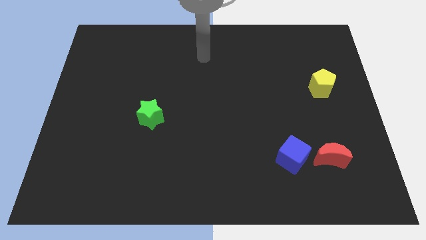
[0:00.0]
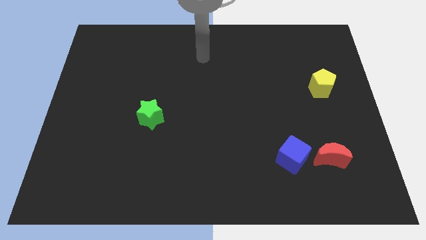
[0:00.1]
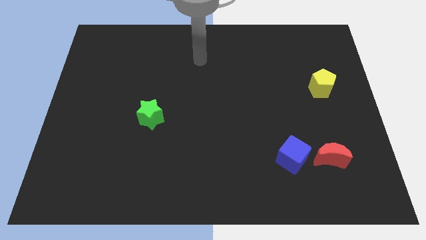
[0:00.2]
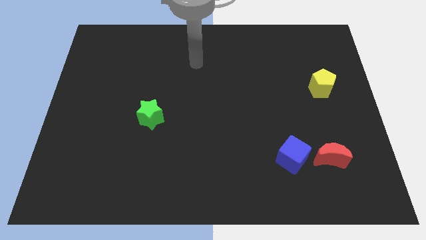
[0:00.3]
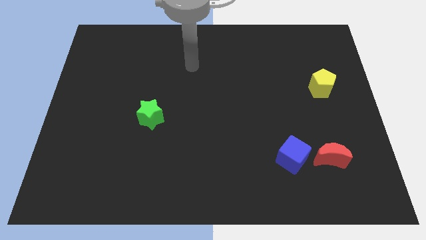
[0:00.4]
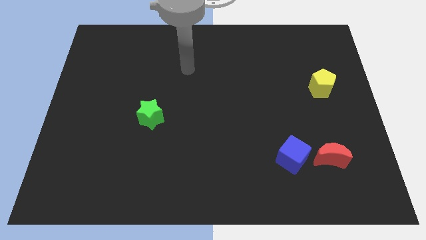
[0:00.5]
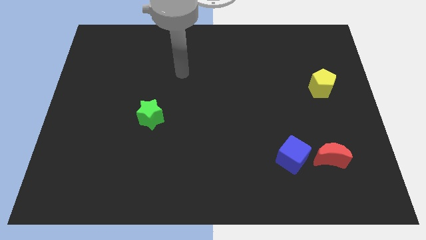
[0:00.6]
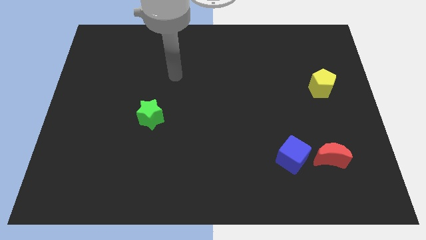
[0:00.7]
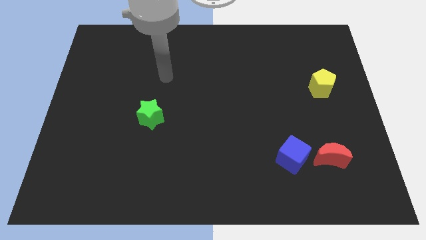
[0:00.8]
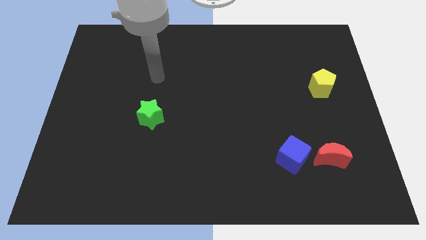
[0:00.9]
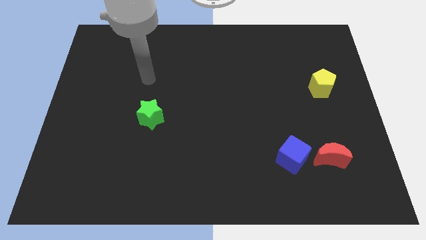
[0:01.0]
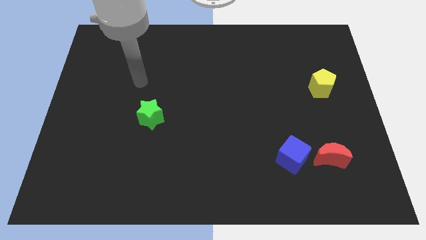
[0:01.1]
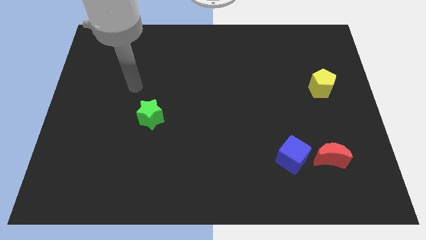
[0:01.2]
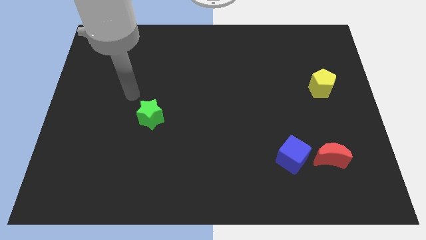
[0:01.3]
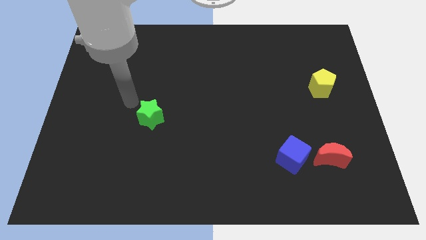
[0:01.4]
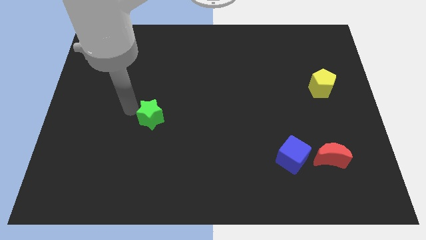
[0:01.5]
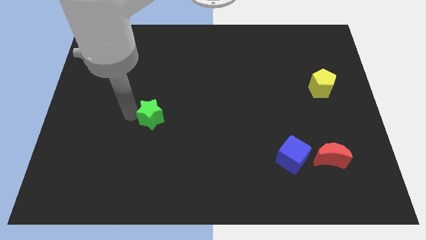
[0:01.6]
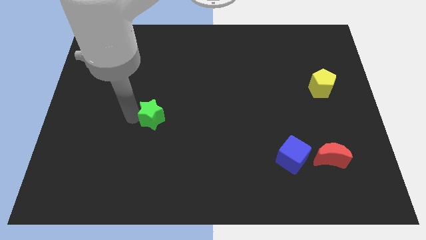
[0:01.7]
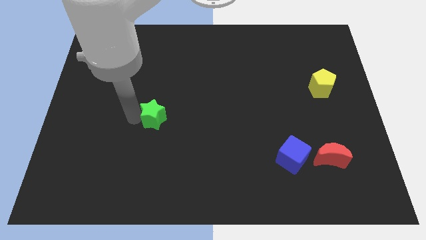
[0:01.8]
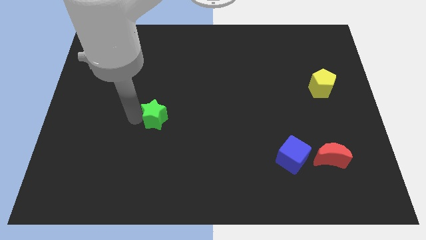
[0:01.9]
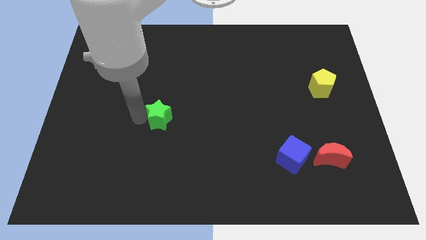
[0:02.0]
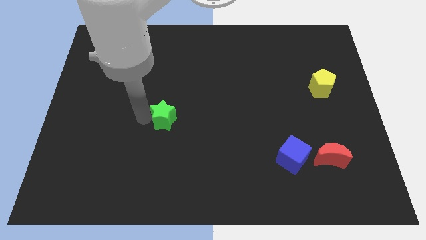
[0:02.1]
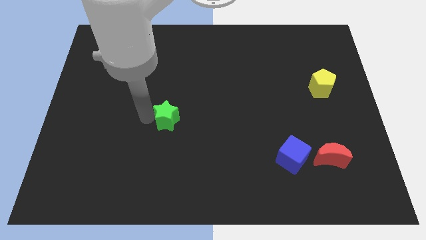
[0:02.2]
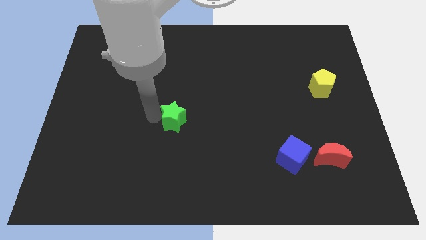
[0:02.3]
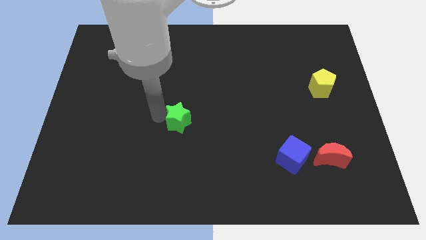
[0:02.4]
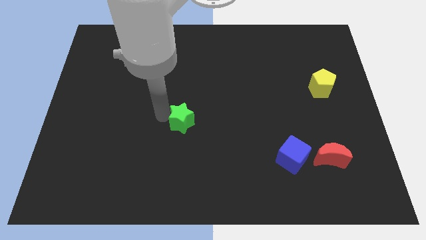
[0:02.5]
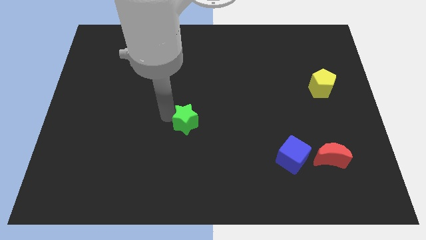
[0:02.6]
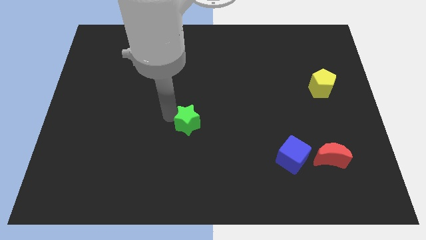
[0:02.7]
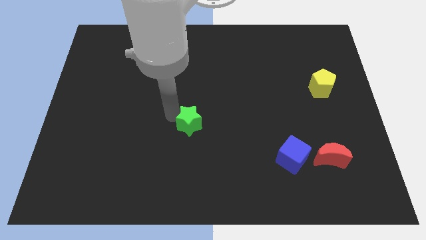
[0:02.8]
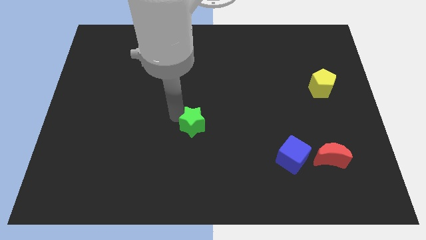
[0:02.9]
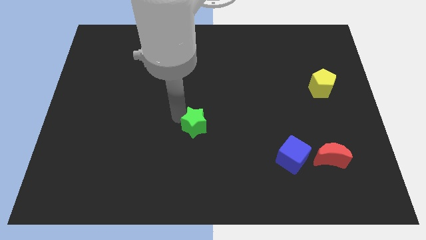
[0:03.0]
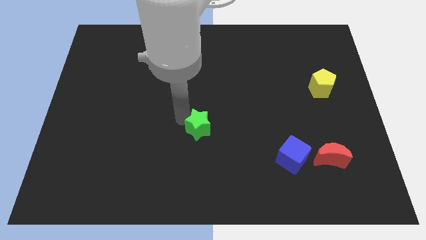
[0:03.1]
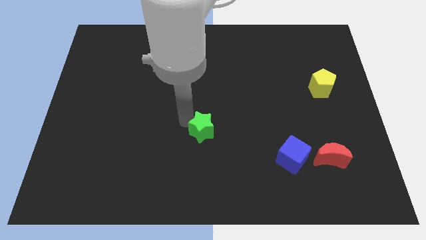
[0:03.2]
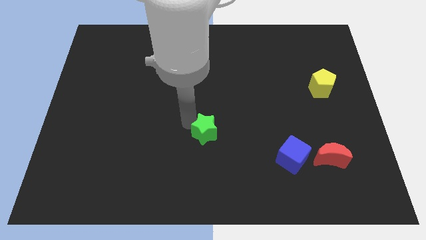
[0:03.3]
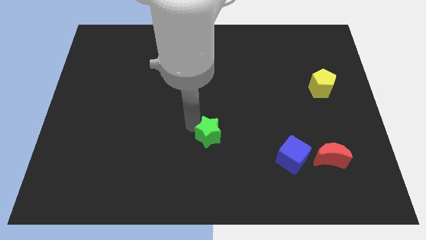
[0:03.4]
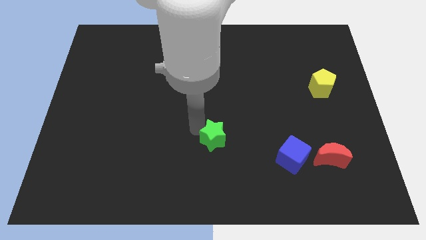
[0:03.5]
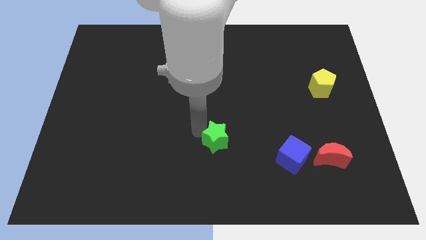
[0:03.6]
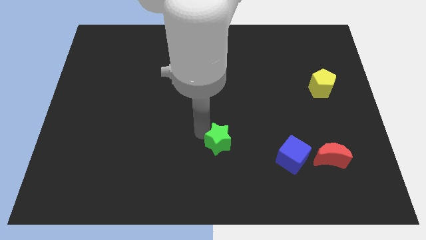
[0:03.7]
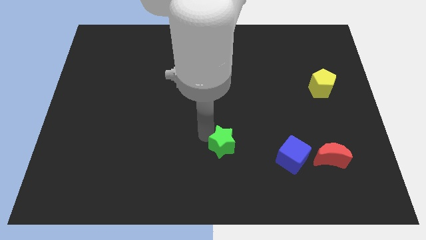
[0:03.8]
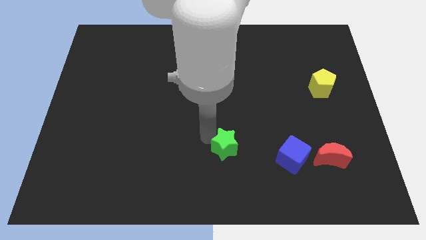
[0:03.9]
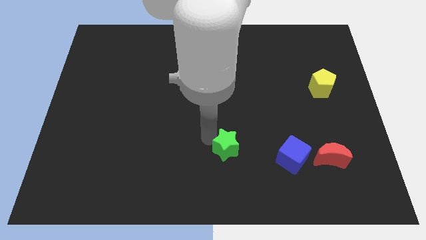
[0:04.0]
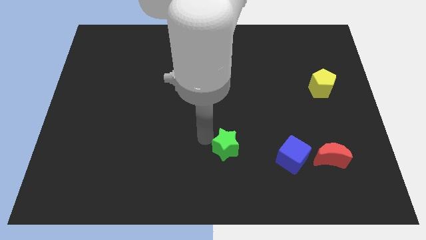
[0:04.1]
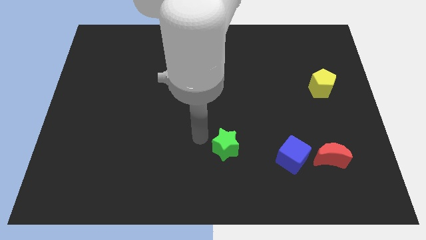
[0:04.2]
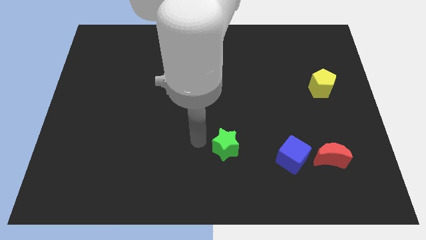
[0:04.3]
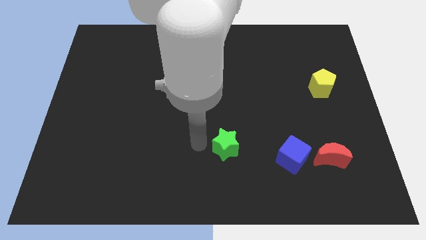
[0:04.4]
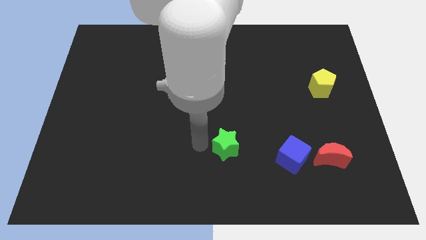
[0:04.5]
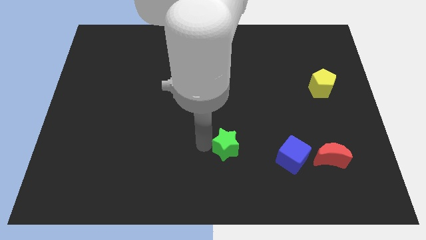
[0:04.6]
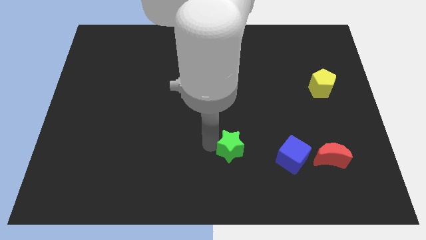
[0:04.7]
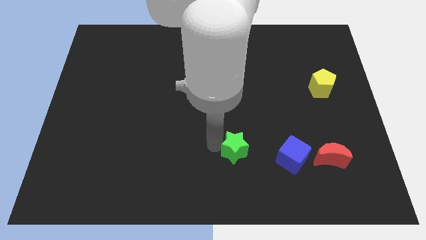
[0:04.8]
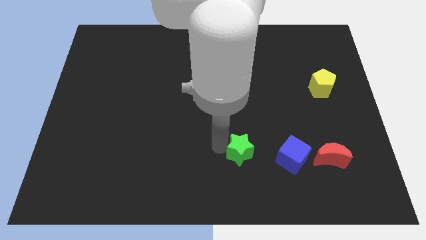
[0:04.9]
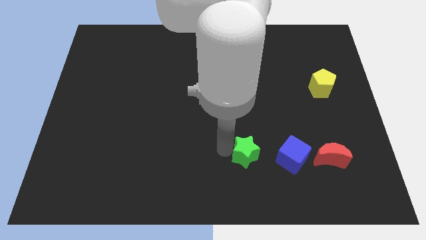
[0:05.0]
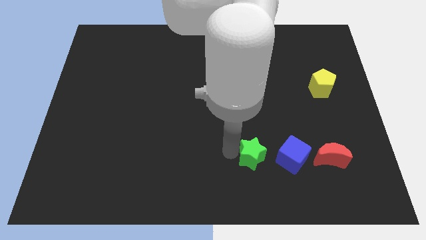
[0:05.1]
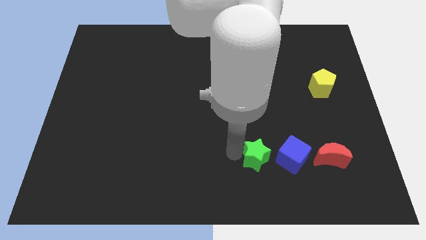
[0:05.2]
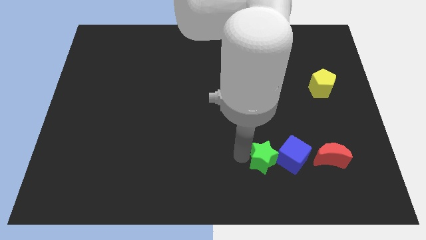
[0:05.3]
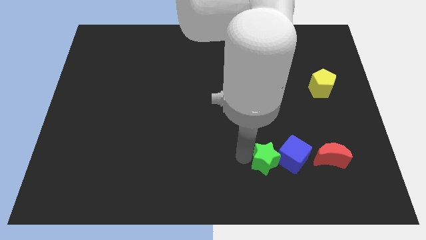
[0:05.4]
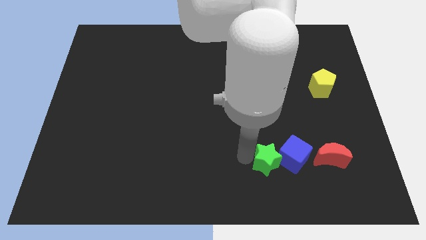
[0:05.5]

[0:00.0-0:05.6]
push the green block towards the blue block

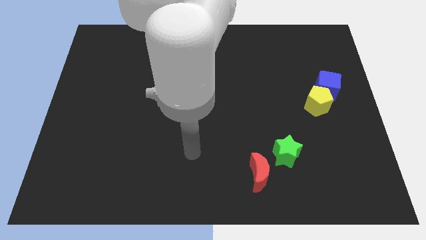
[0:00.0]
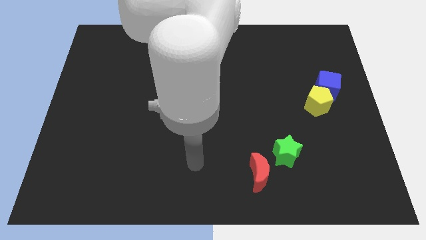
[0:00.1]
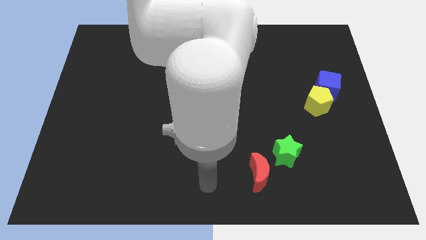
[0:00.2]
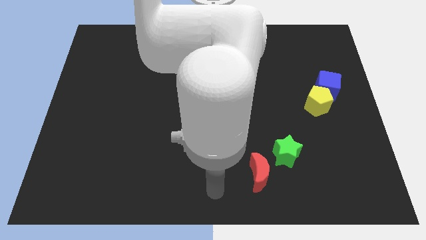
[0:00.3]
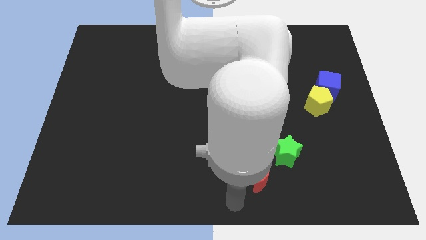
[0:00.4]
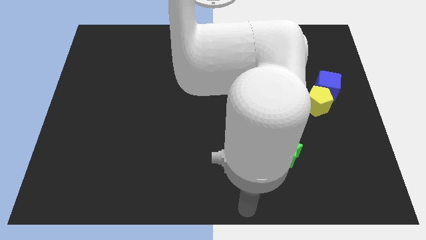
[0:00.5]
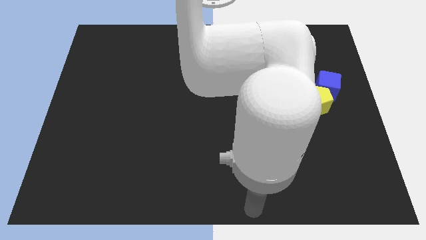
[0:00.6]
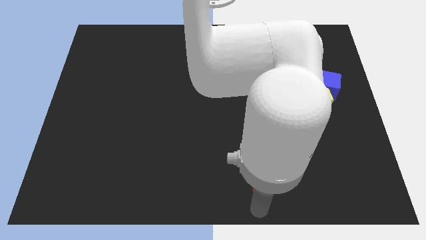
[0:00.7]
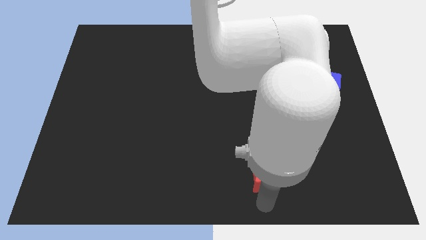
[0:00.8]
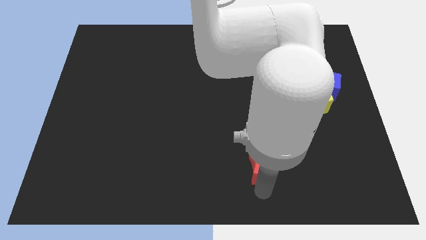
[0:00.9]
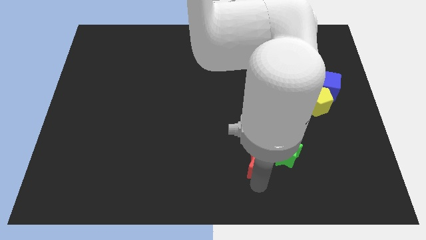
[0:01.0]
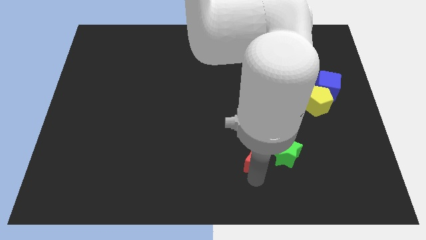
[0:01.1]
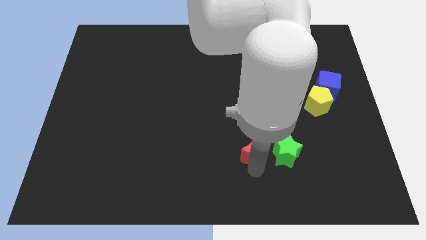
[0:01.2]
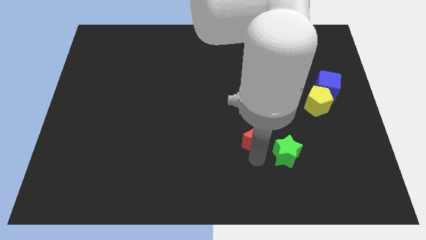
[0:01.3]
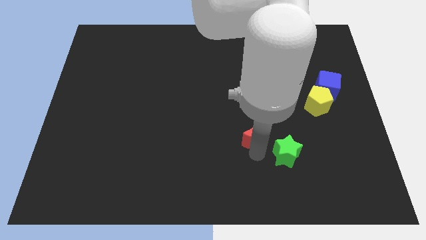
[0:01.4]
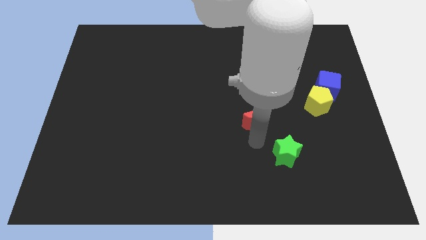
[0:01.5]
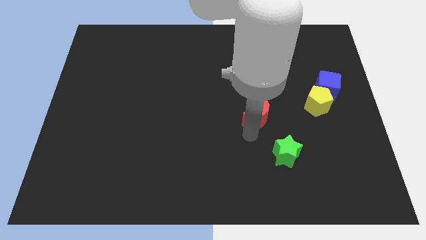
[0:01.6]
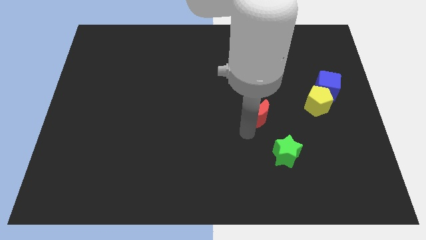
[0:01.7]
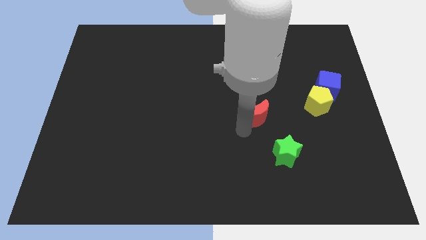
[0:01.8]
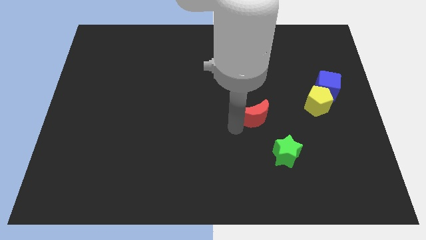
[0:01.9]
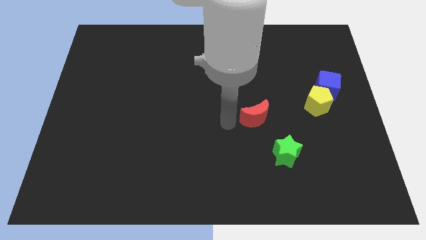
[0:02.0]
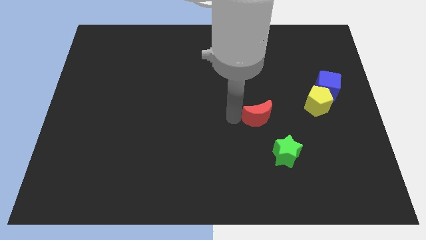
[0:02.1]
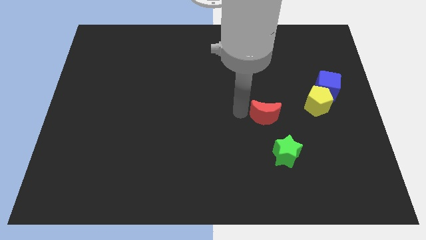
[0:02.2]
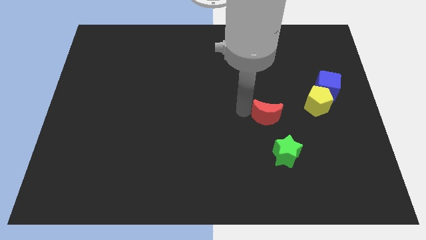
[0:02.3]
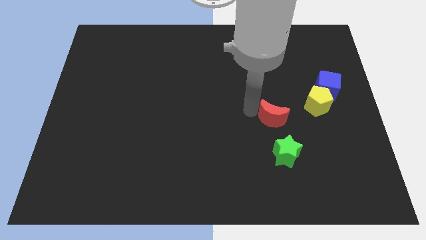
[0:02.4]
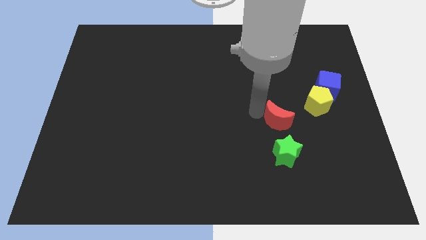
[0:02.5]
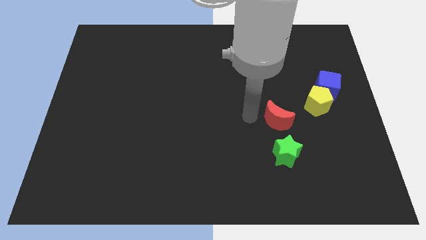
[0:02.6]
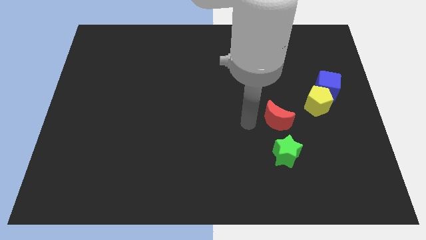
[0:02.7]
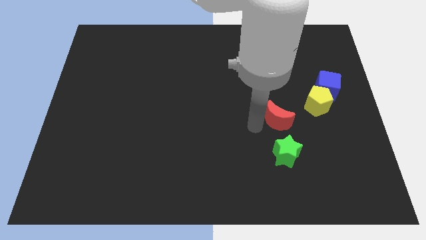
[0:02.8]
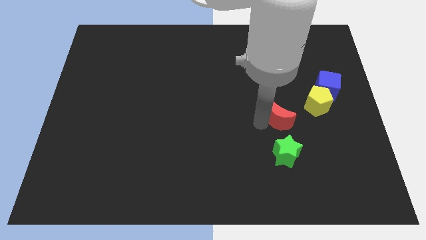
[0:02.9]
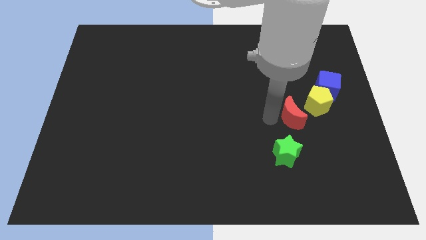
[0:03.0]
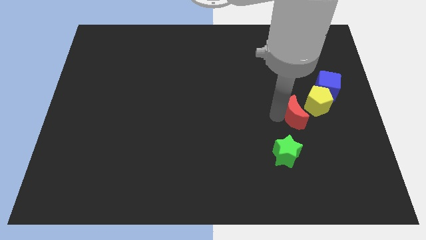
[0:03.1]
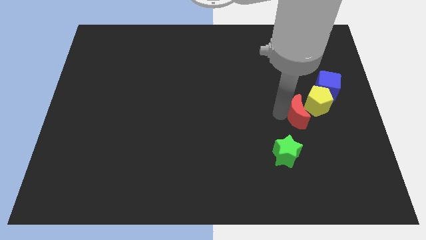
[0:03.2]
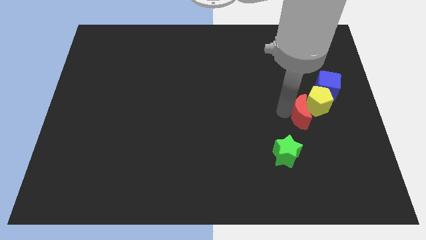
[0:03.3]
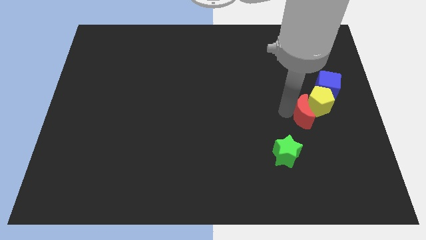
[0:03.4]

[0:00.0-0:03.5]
move the moon next to the yellow block
